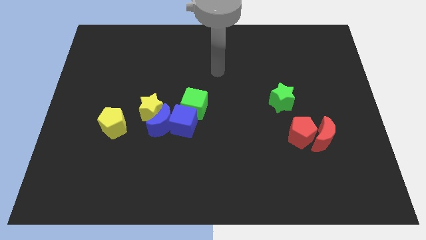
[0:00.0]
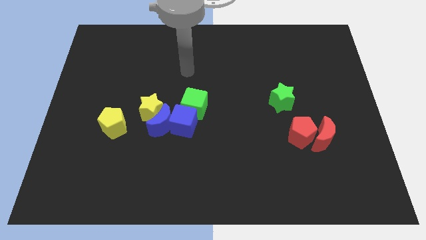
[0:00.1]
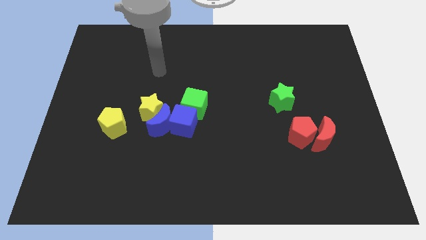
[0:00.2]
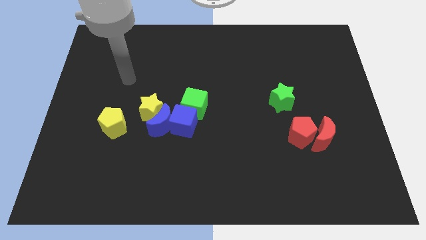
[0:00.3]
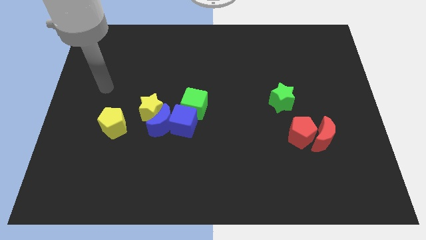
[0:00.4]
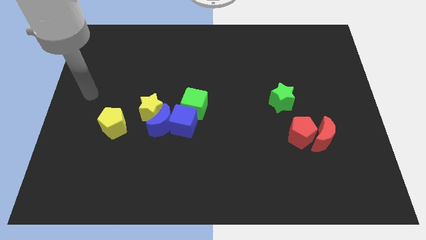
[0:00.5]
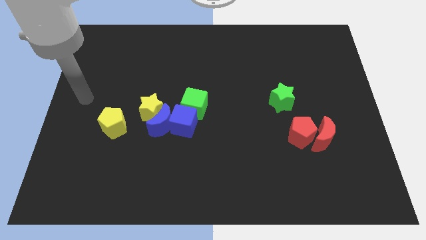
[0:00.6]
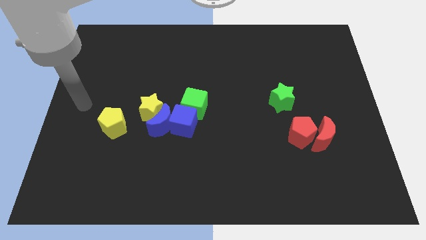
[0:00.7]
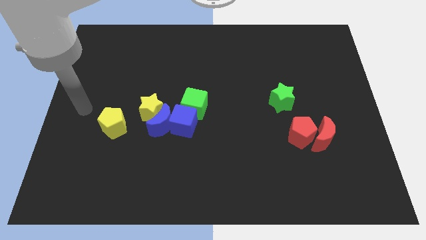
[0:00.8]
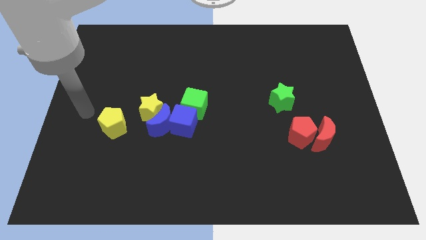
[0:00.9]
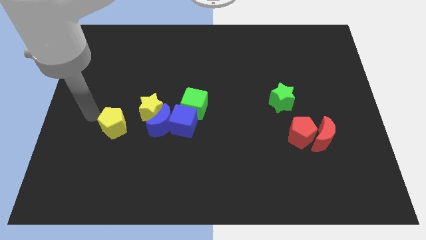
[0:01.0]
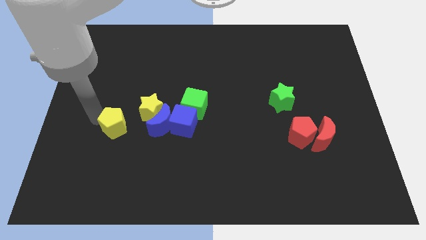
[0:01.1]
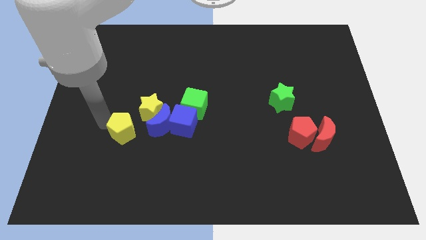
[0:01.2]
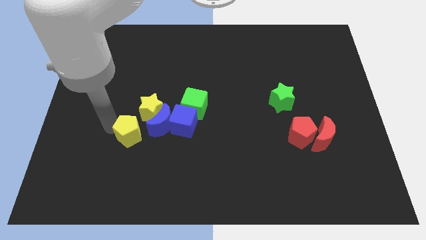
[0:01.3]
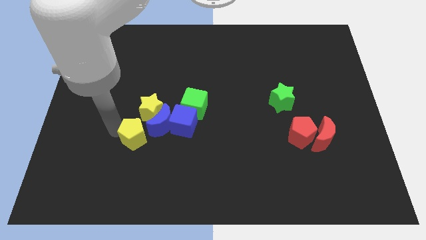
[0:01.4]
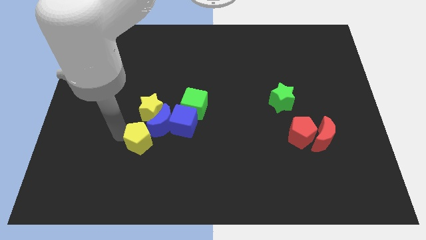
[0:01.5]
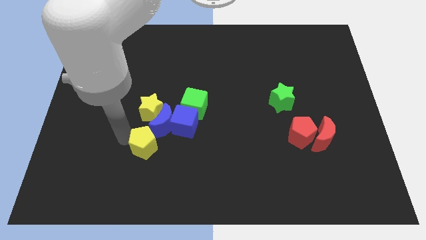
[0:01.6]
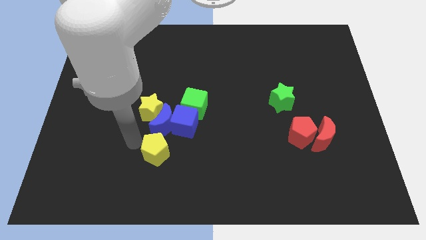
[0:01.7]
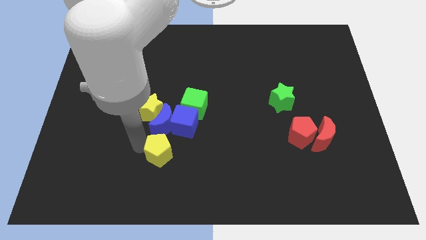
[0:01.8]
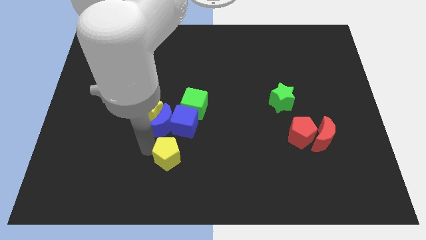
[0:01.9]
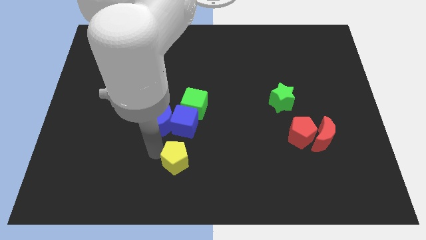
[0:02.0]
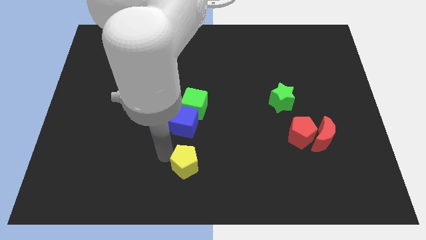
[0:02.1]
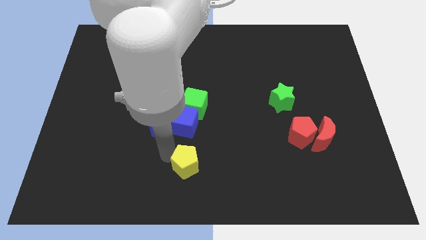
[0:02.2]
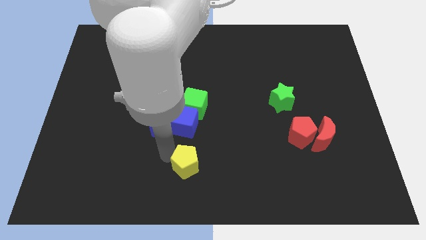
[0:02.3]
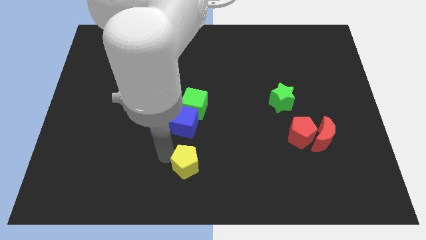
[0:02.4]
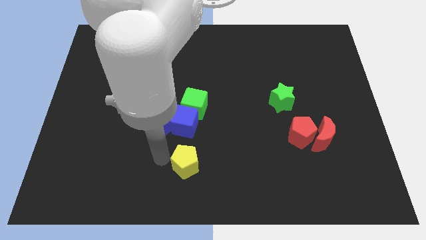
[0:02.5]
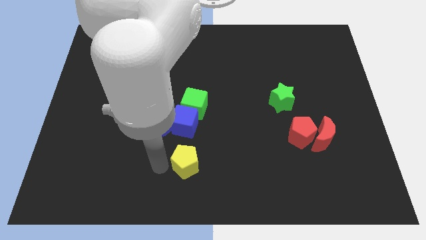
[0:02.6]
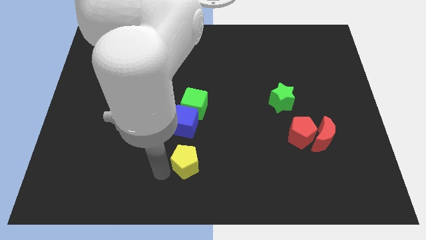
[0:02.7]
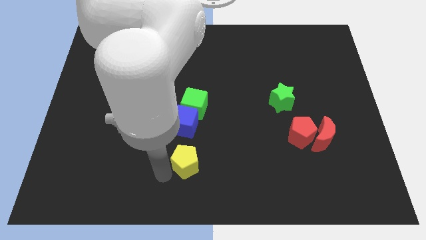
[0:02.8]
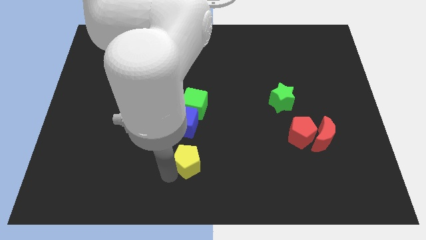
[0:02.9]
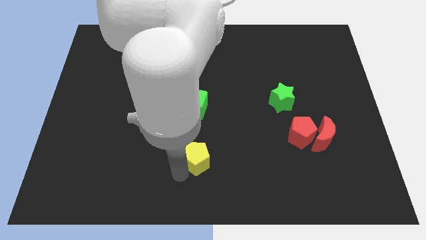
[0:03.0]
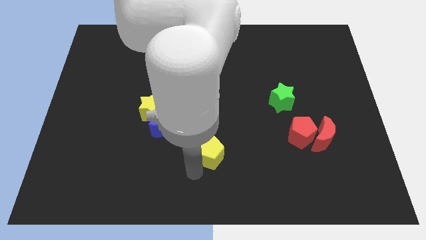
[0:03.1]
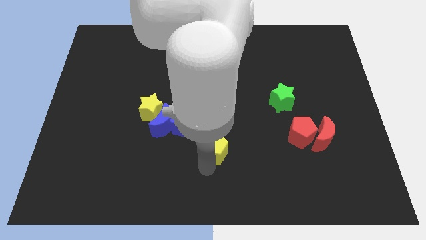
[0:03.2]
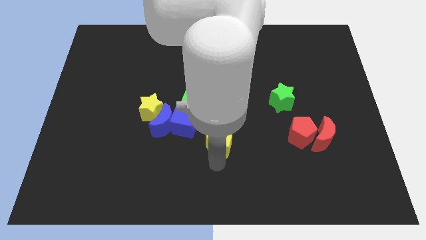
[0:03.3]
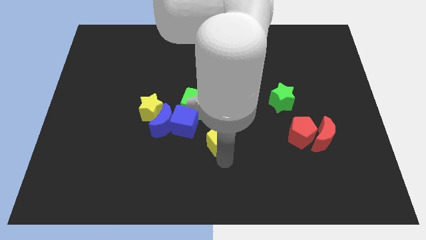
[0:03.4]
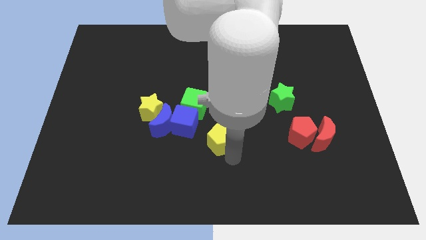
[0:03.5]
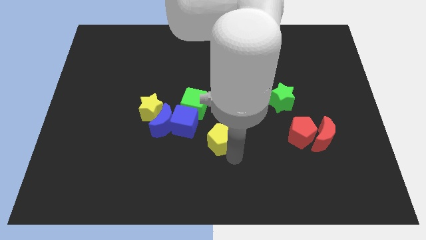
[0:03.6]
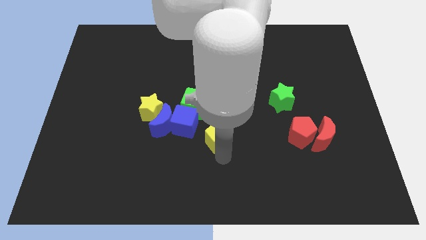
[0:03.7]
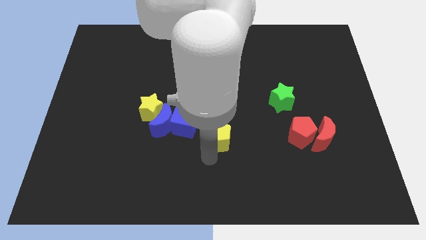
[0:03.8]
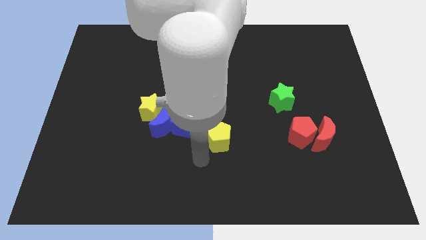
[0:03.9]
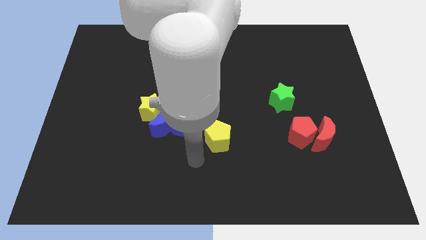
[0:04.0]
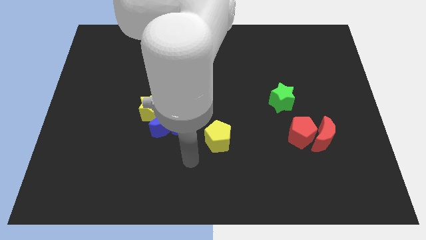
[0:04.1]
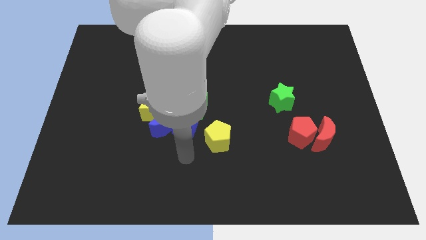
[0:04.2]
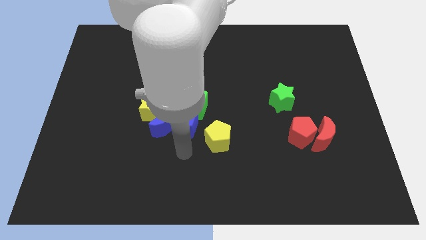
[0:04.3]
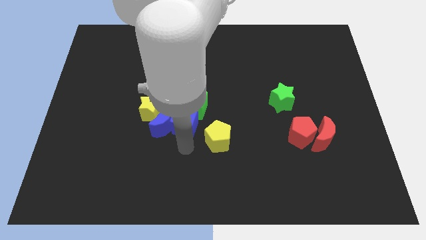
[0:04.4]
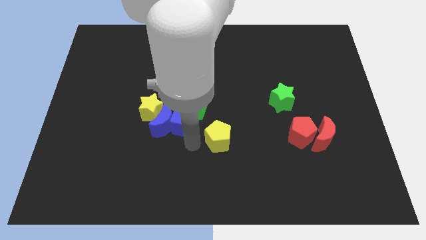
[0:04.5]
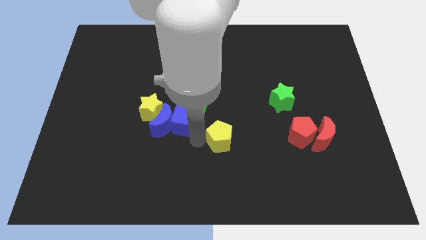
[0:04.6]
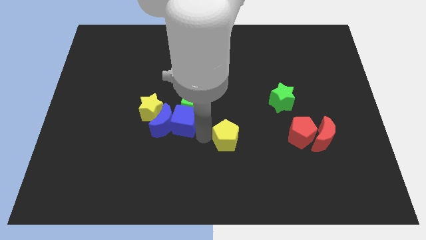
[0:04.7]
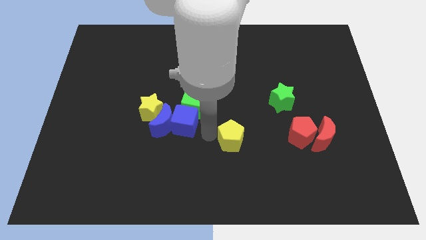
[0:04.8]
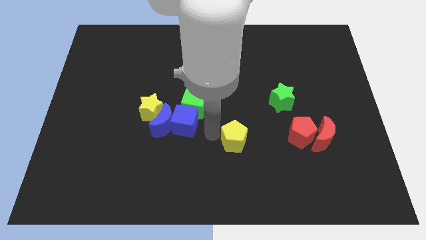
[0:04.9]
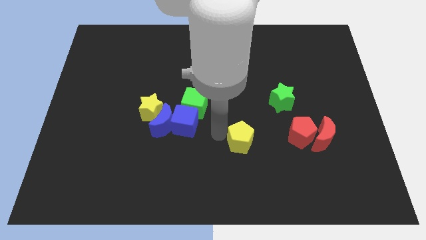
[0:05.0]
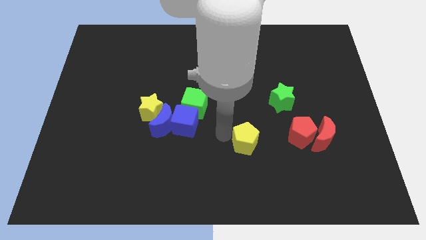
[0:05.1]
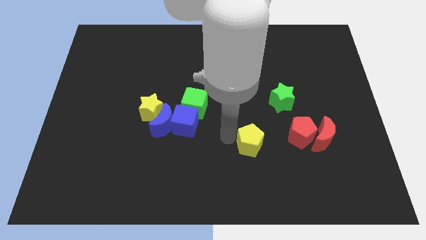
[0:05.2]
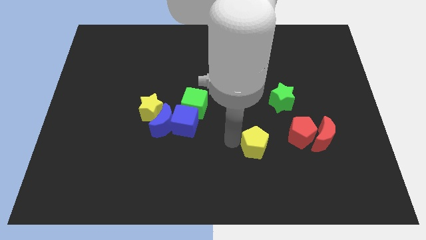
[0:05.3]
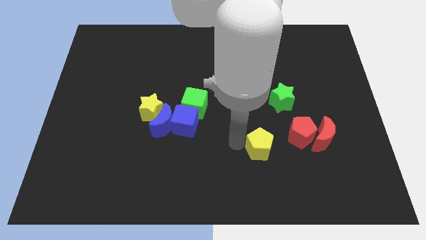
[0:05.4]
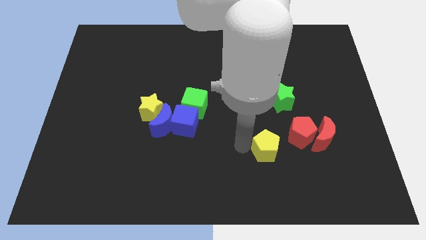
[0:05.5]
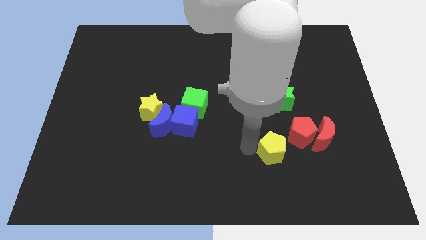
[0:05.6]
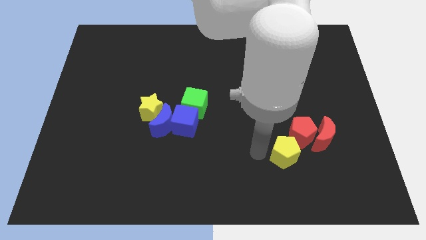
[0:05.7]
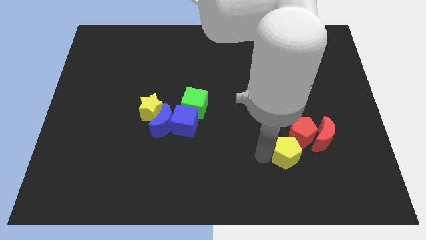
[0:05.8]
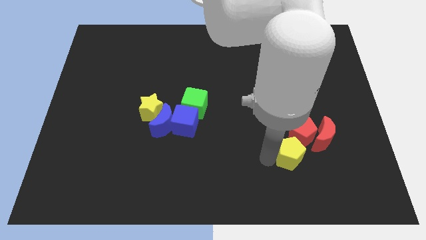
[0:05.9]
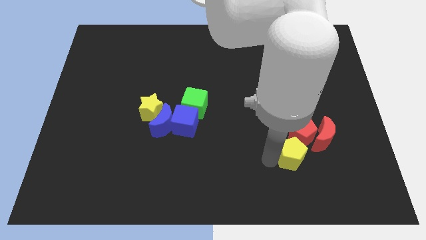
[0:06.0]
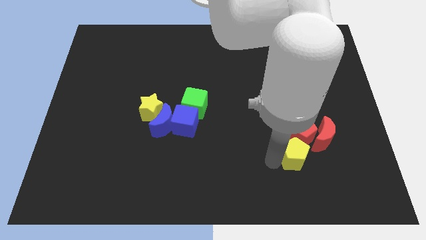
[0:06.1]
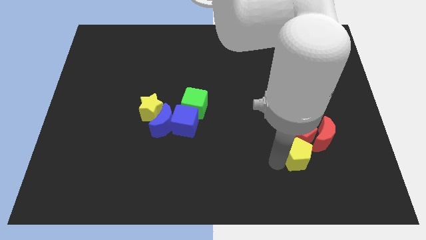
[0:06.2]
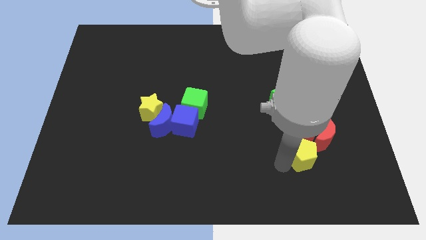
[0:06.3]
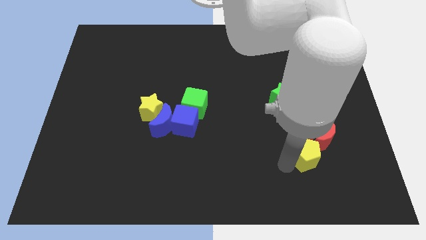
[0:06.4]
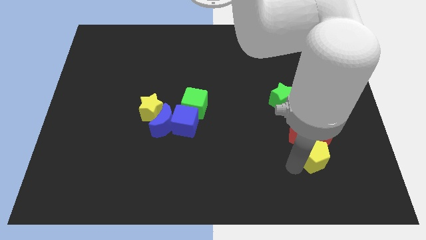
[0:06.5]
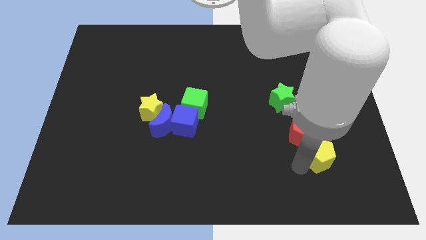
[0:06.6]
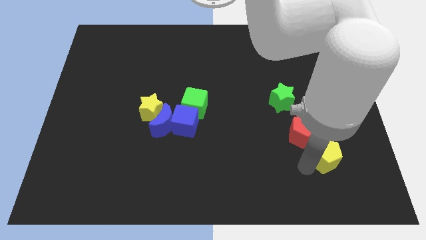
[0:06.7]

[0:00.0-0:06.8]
move the yellow pentagon close to the red moon

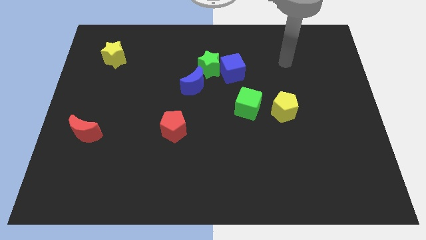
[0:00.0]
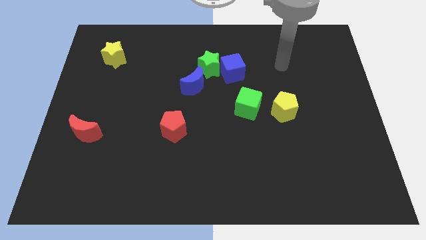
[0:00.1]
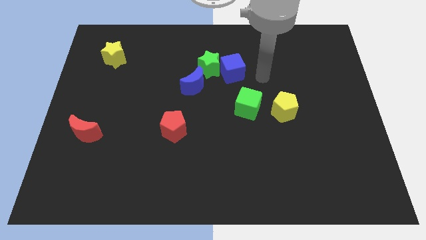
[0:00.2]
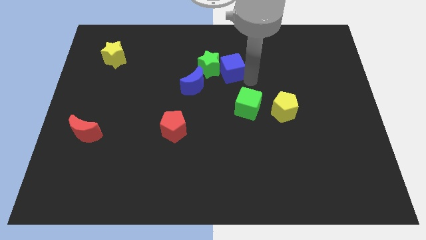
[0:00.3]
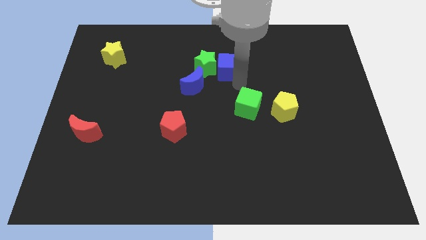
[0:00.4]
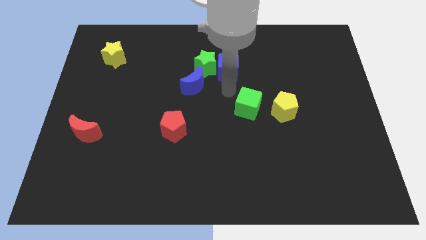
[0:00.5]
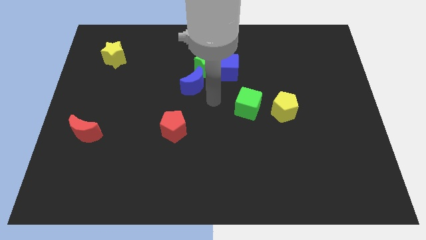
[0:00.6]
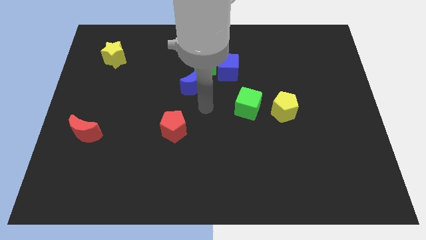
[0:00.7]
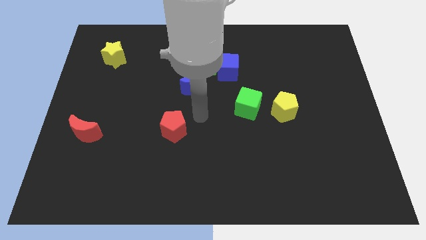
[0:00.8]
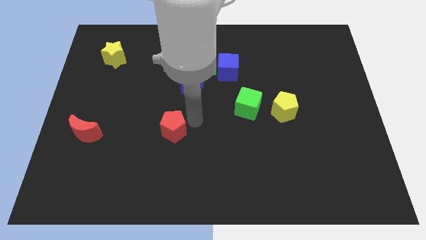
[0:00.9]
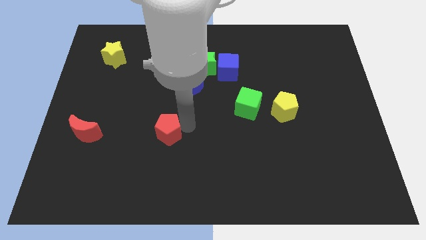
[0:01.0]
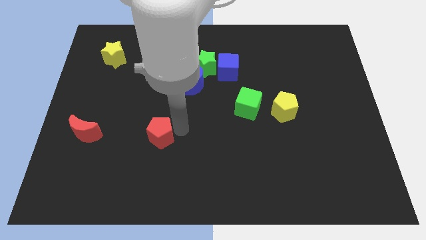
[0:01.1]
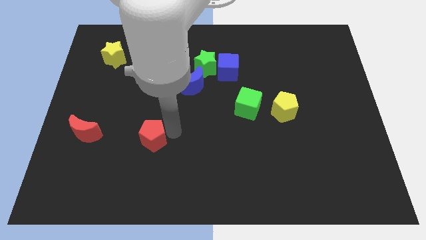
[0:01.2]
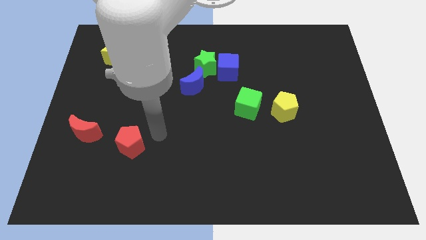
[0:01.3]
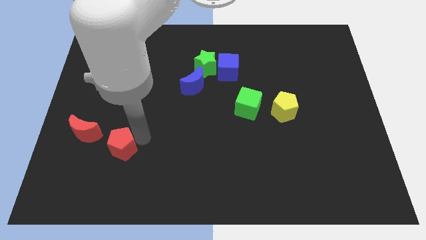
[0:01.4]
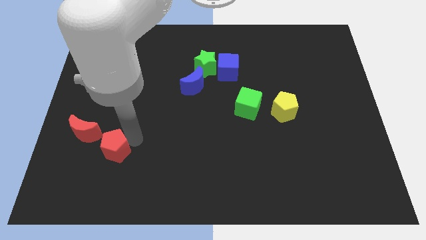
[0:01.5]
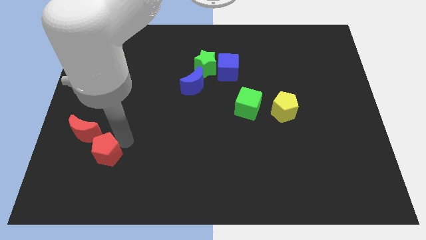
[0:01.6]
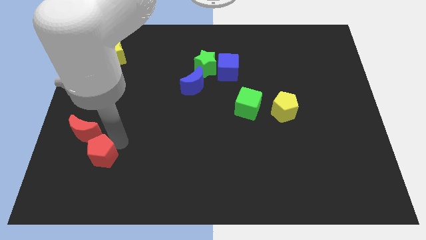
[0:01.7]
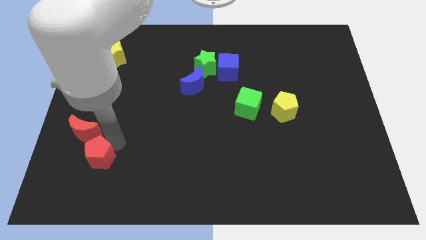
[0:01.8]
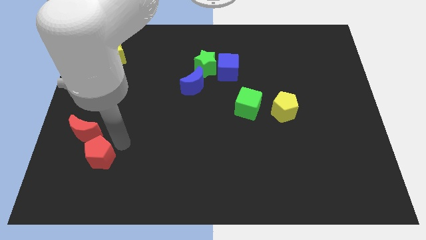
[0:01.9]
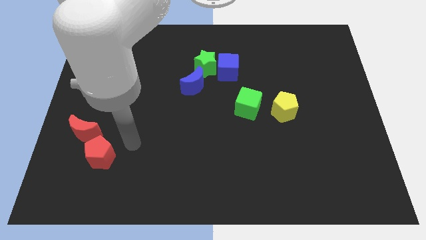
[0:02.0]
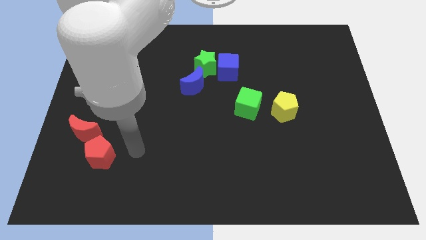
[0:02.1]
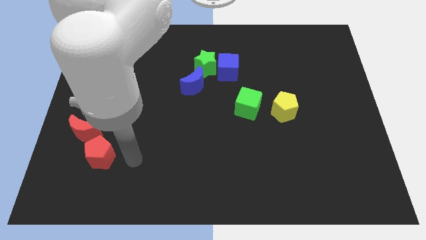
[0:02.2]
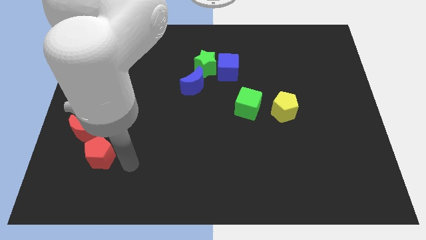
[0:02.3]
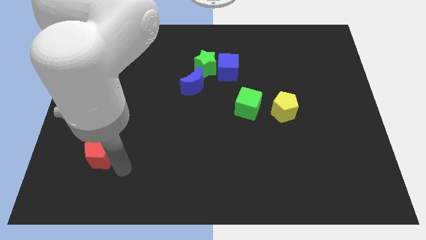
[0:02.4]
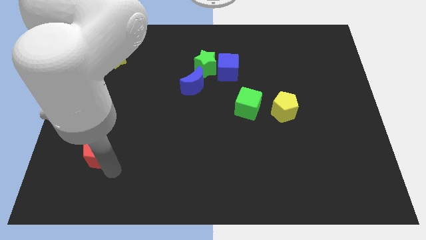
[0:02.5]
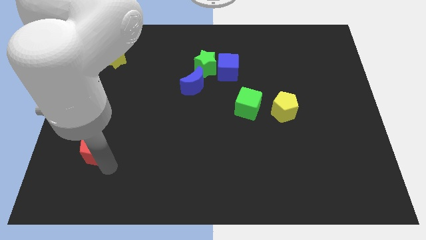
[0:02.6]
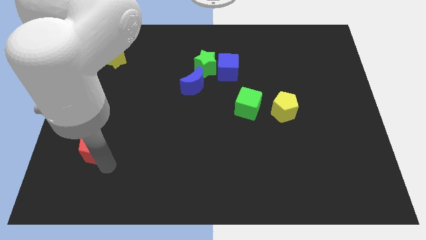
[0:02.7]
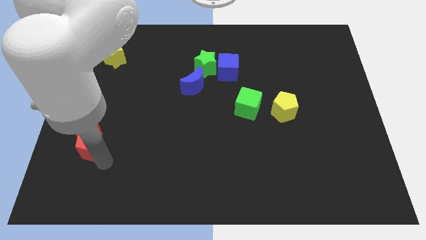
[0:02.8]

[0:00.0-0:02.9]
move the red pentagon next to the red moon
